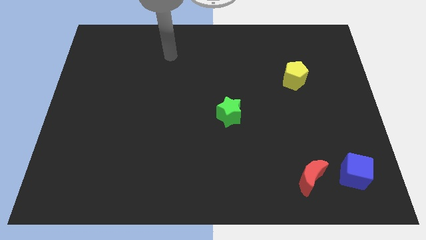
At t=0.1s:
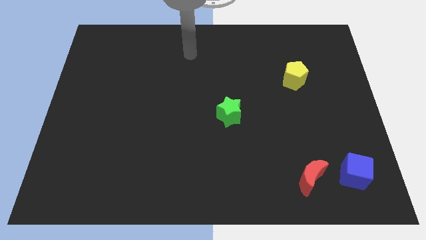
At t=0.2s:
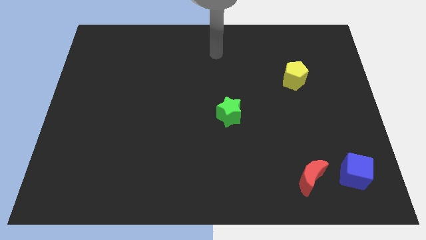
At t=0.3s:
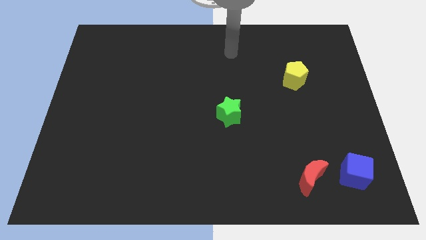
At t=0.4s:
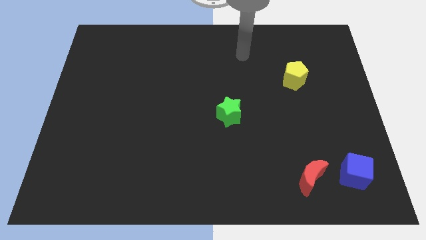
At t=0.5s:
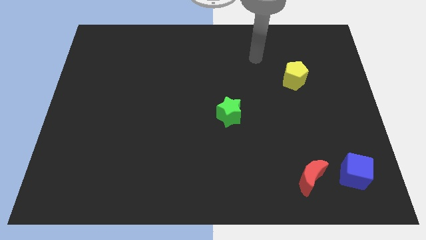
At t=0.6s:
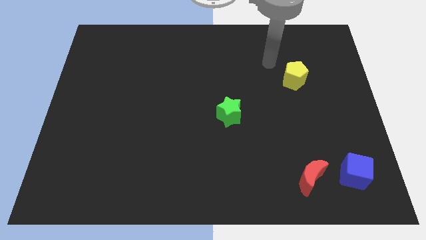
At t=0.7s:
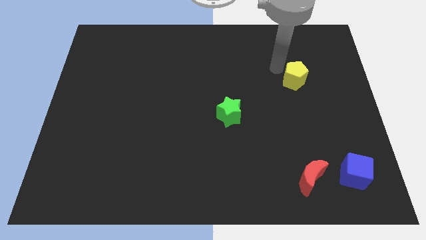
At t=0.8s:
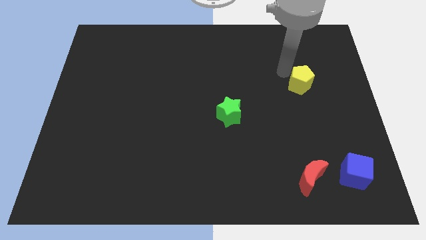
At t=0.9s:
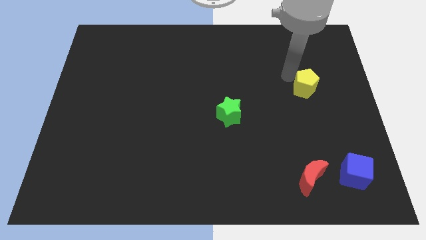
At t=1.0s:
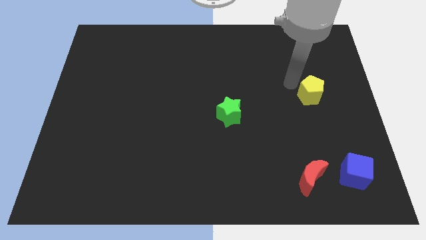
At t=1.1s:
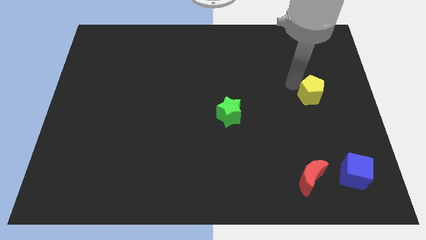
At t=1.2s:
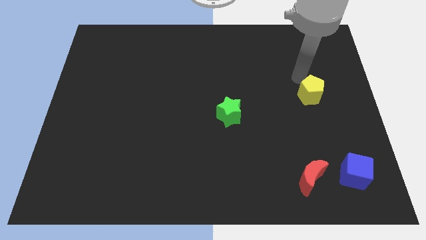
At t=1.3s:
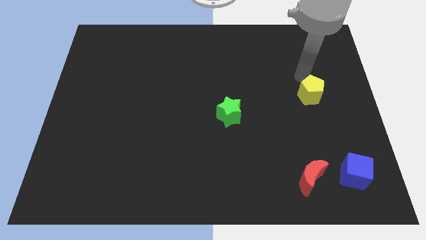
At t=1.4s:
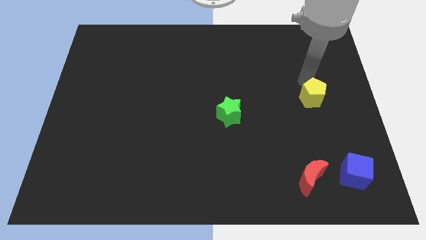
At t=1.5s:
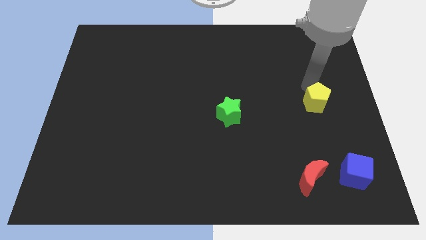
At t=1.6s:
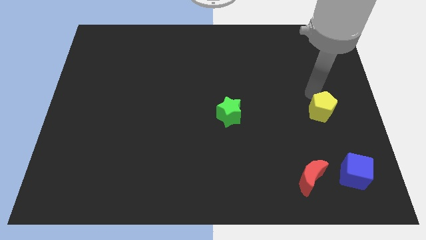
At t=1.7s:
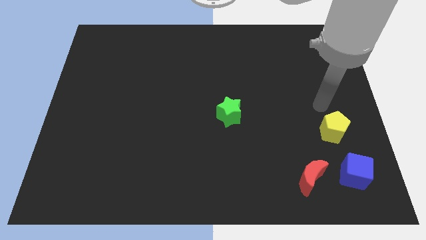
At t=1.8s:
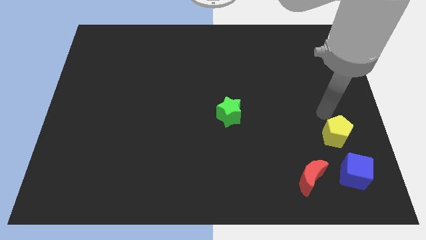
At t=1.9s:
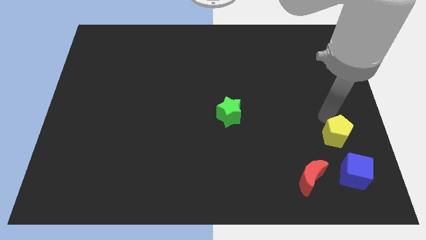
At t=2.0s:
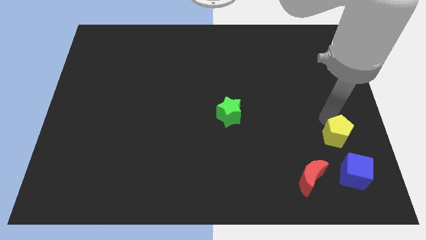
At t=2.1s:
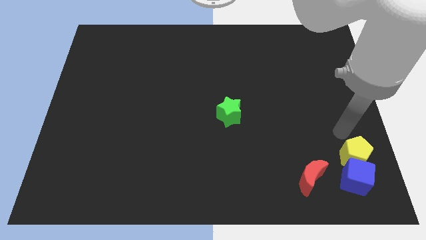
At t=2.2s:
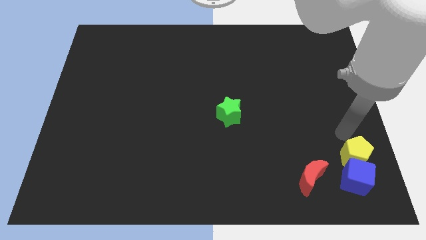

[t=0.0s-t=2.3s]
push the pentagon close to the cube

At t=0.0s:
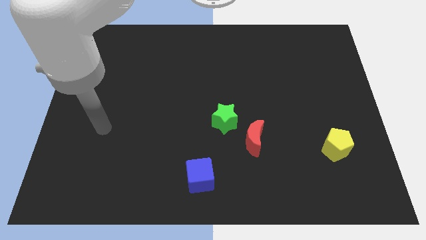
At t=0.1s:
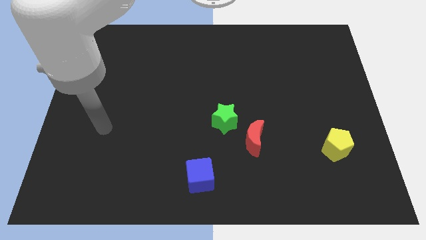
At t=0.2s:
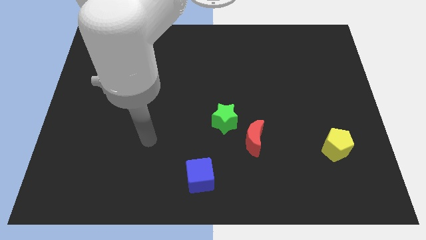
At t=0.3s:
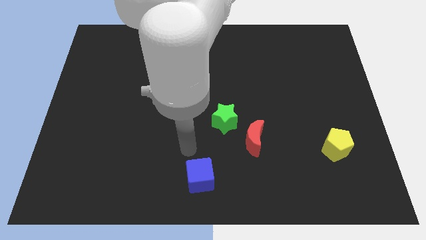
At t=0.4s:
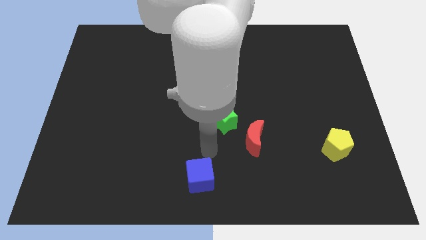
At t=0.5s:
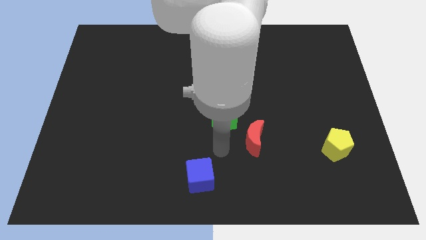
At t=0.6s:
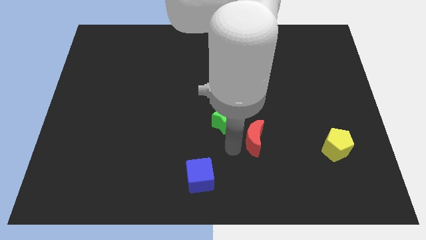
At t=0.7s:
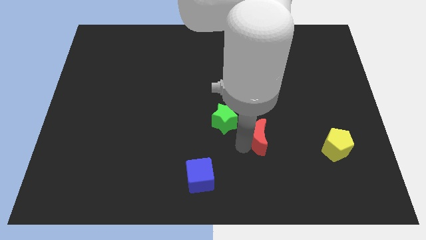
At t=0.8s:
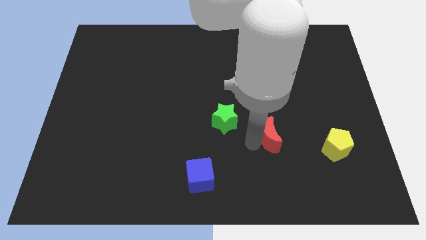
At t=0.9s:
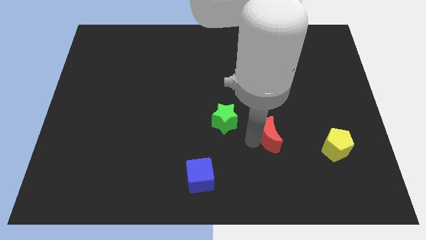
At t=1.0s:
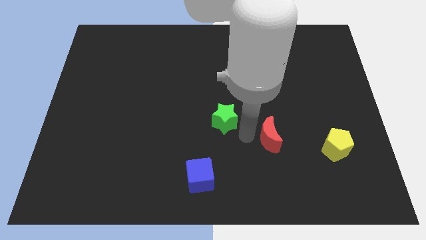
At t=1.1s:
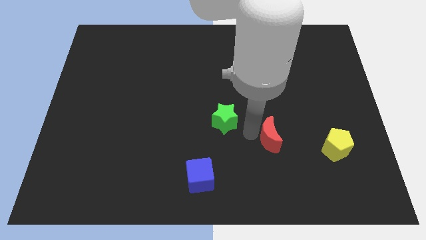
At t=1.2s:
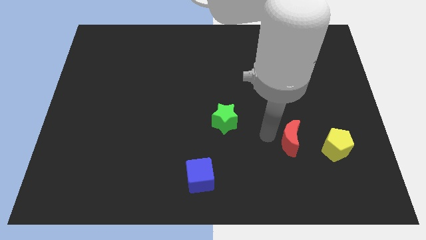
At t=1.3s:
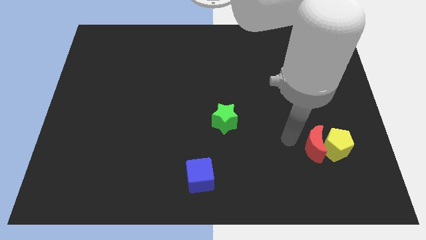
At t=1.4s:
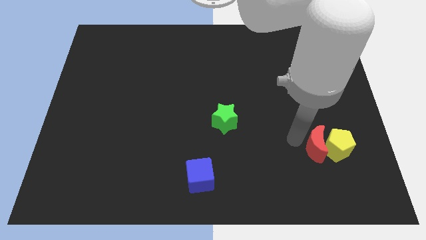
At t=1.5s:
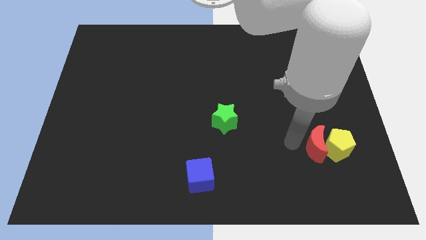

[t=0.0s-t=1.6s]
push the moon to the pentagon

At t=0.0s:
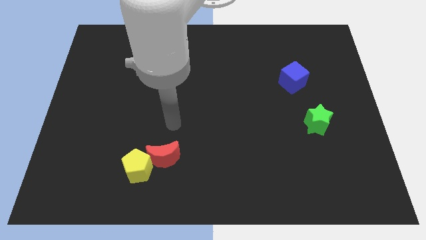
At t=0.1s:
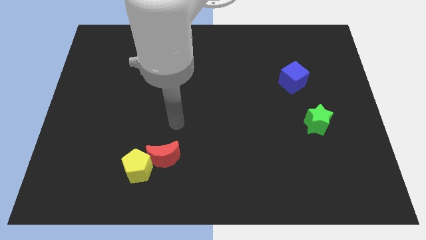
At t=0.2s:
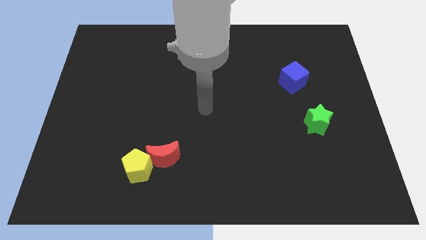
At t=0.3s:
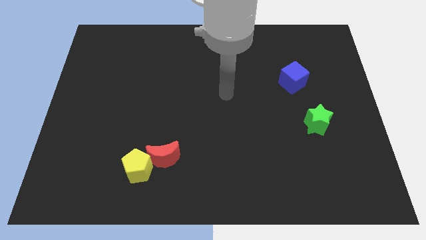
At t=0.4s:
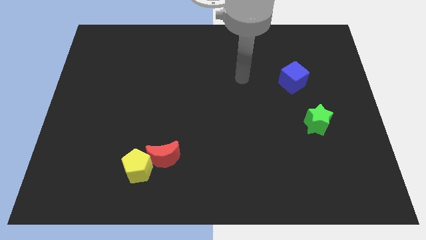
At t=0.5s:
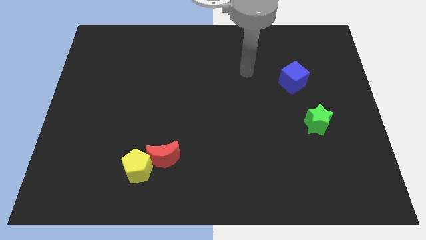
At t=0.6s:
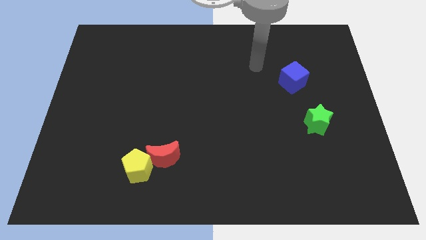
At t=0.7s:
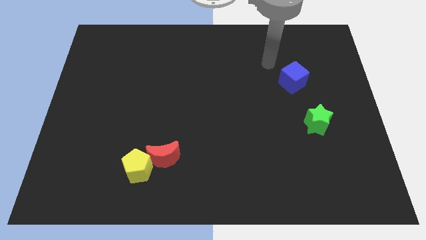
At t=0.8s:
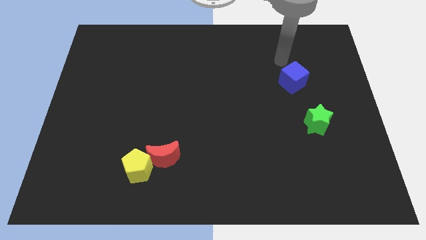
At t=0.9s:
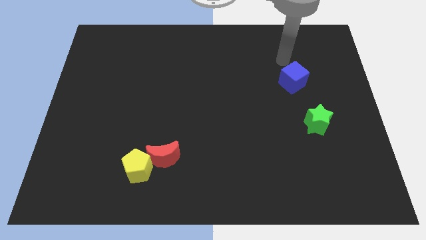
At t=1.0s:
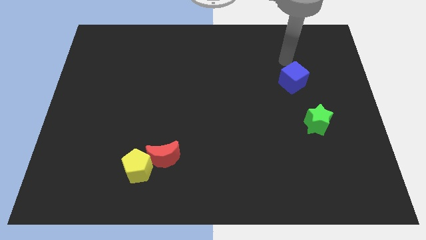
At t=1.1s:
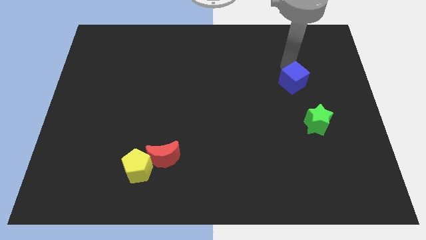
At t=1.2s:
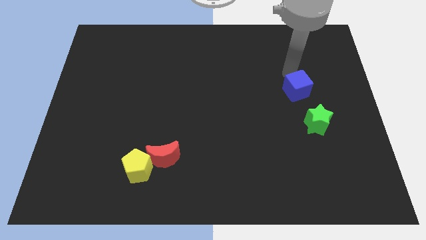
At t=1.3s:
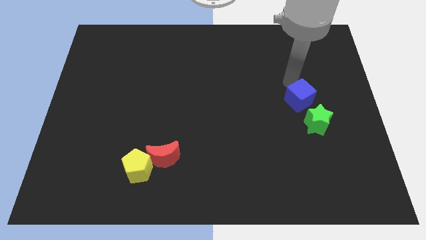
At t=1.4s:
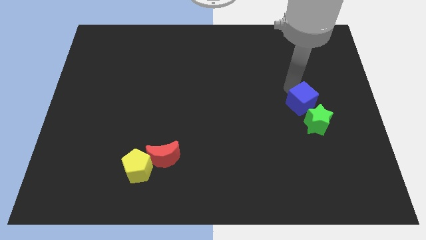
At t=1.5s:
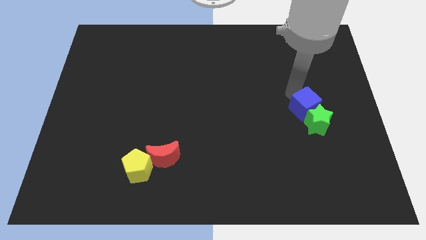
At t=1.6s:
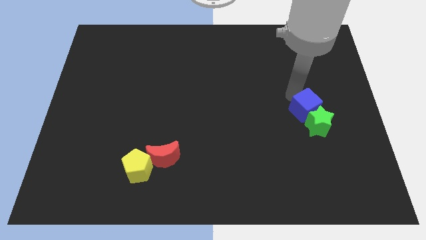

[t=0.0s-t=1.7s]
move the blue block towards the star

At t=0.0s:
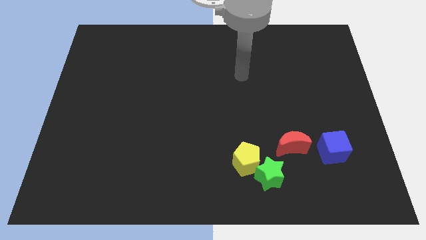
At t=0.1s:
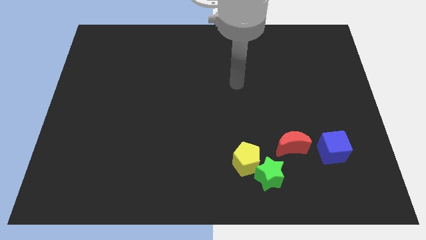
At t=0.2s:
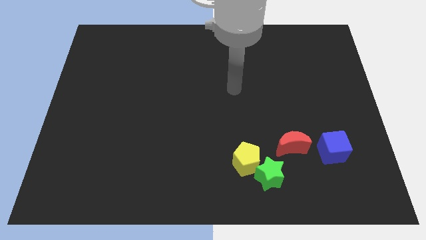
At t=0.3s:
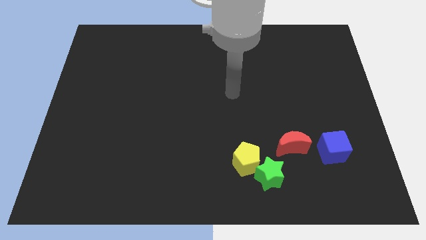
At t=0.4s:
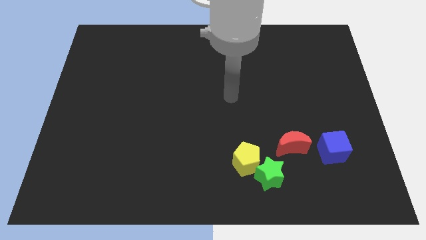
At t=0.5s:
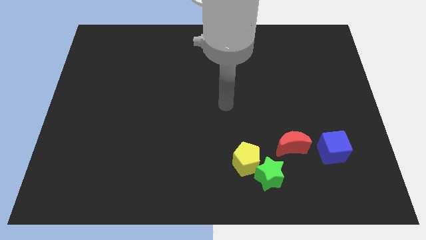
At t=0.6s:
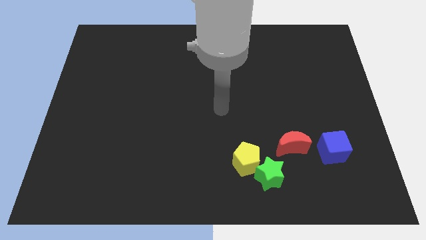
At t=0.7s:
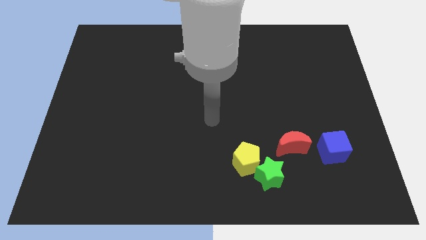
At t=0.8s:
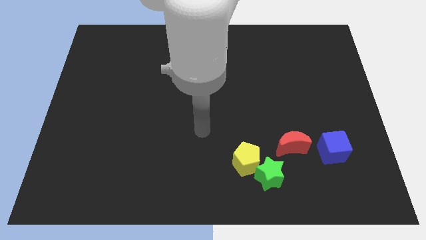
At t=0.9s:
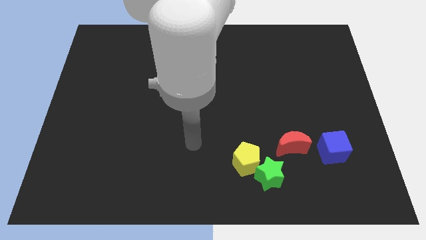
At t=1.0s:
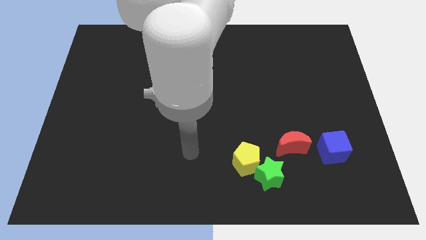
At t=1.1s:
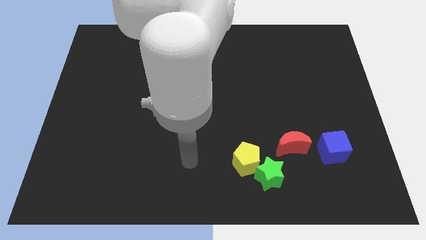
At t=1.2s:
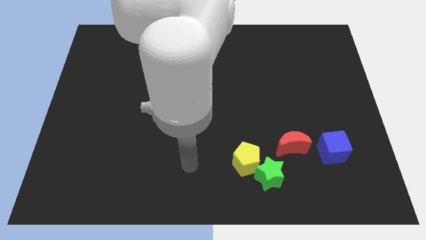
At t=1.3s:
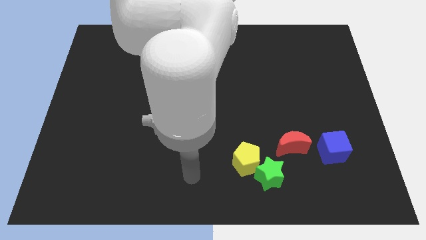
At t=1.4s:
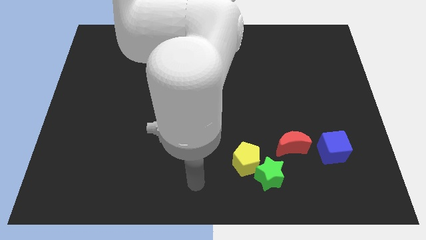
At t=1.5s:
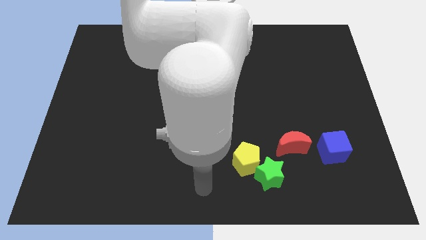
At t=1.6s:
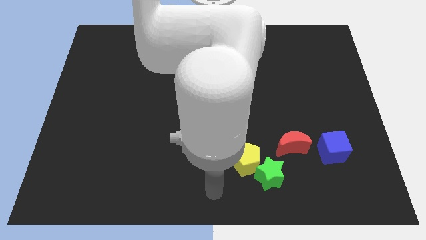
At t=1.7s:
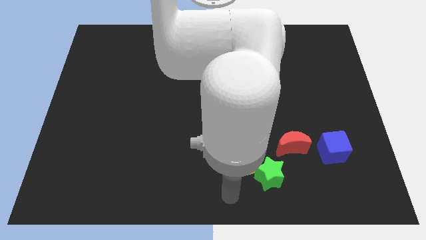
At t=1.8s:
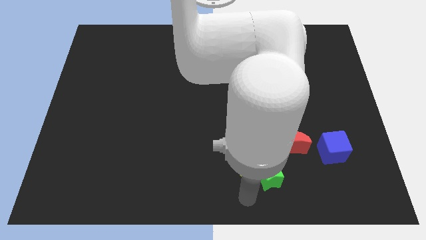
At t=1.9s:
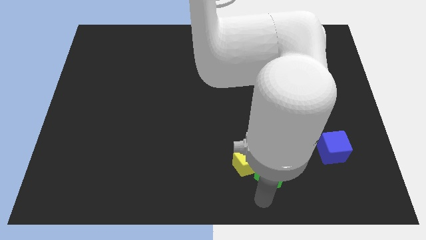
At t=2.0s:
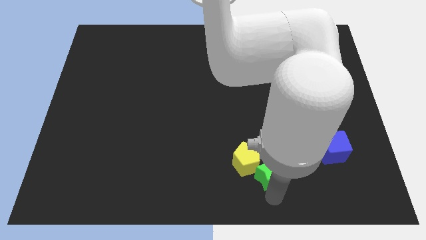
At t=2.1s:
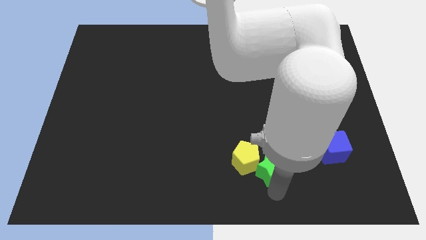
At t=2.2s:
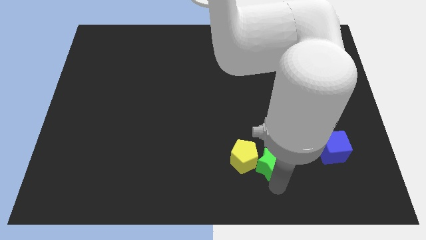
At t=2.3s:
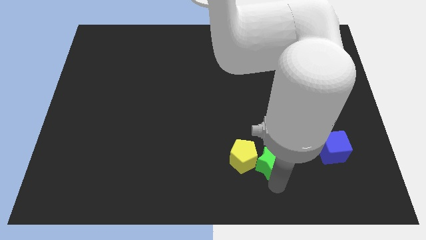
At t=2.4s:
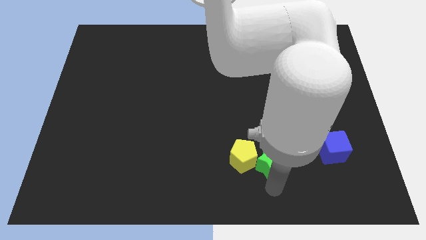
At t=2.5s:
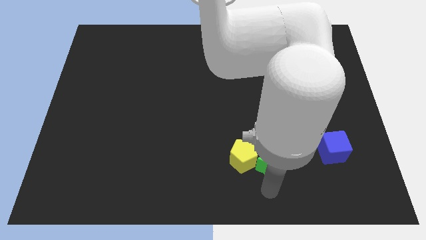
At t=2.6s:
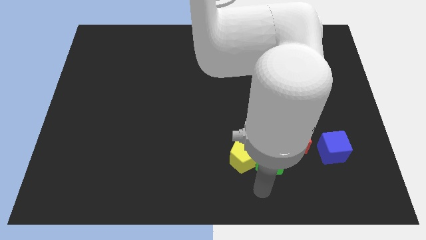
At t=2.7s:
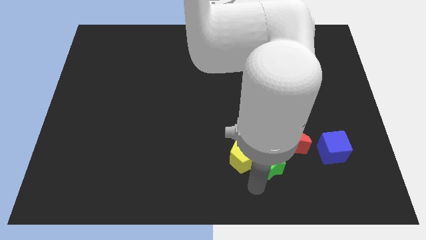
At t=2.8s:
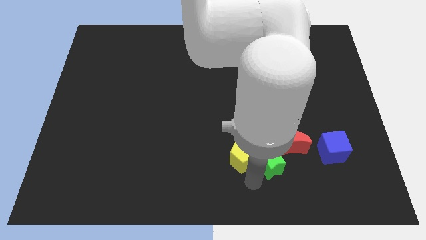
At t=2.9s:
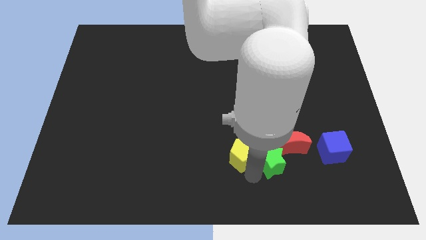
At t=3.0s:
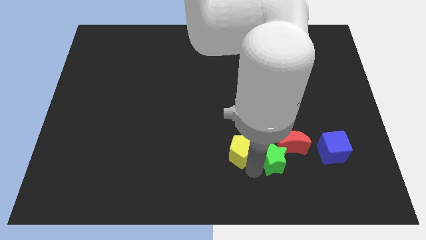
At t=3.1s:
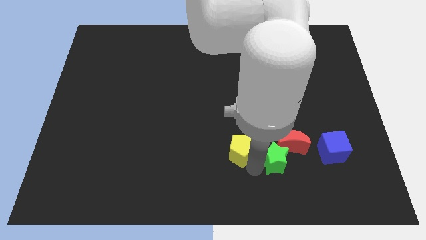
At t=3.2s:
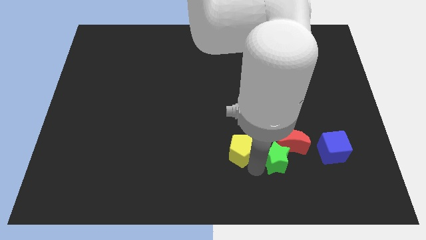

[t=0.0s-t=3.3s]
slide the green star next to the moon
